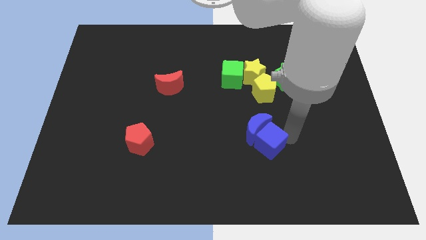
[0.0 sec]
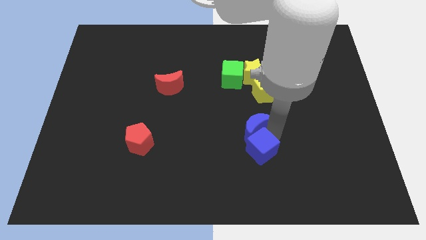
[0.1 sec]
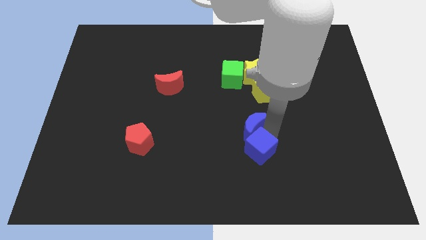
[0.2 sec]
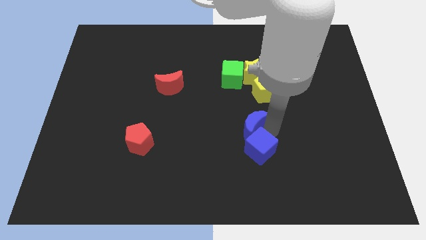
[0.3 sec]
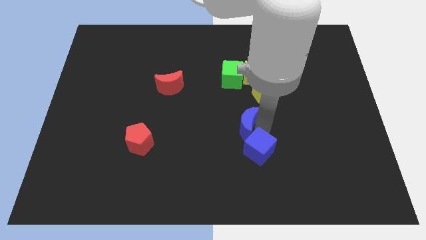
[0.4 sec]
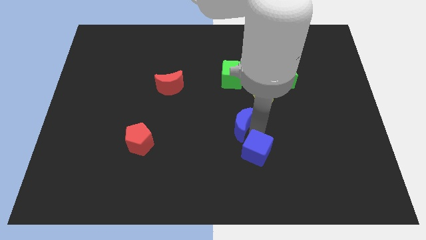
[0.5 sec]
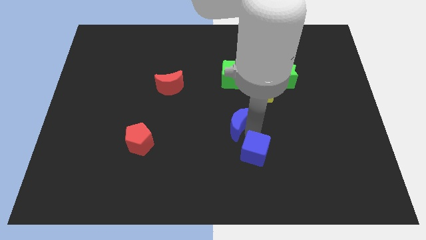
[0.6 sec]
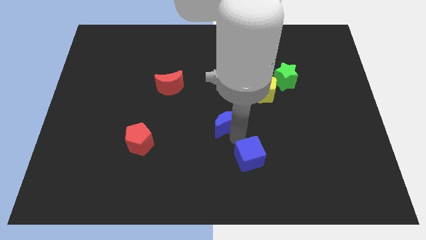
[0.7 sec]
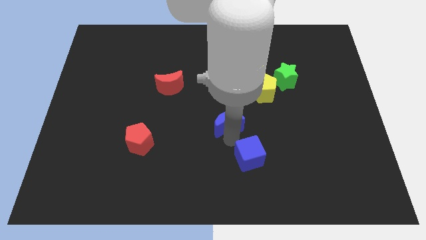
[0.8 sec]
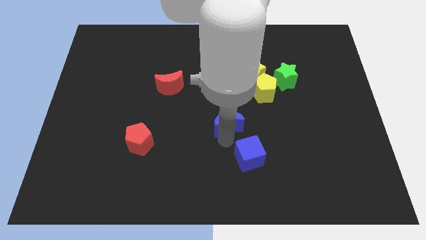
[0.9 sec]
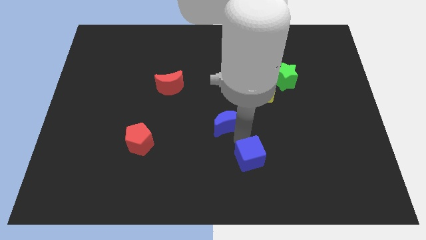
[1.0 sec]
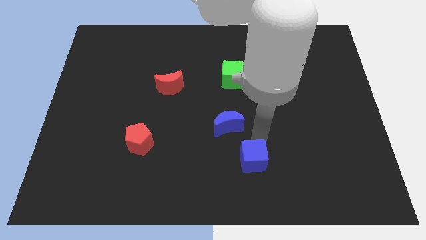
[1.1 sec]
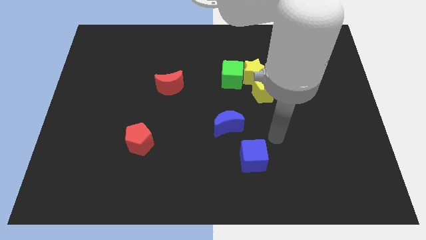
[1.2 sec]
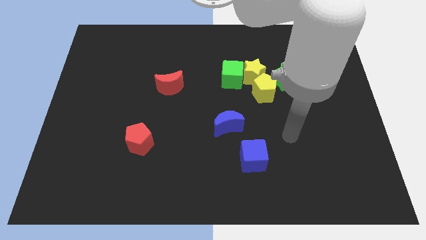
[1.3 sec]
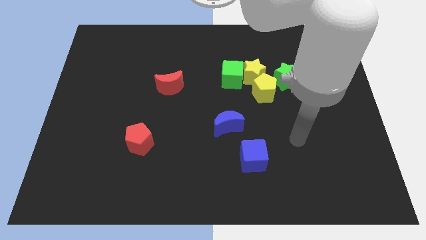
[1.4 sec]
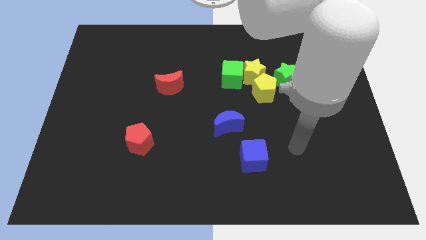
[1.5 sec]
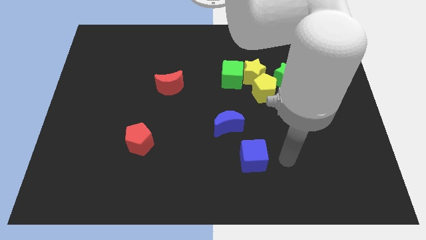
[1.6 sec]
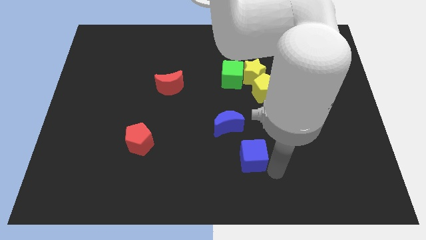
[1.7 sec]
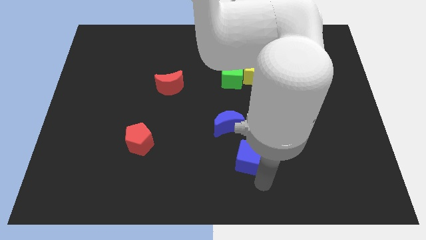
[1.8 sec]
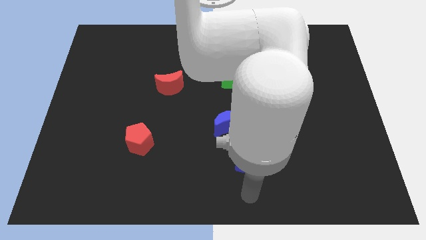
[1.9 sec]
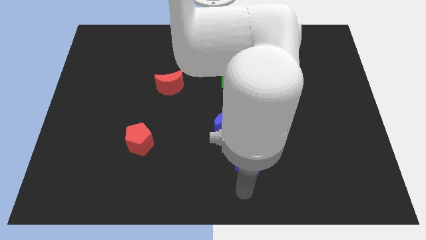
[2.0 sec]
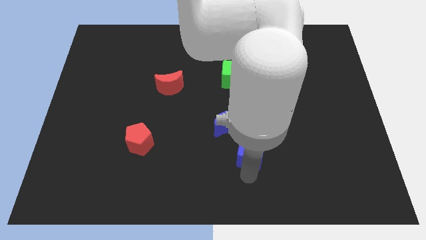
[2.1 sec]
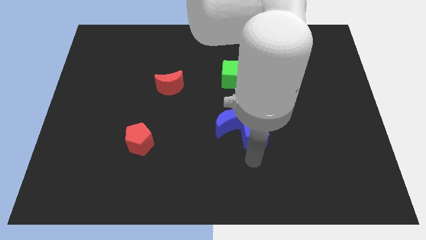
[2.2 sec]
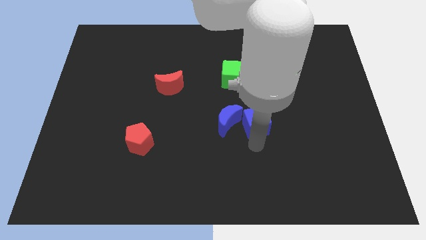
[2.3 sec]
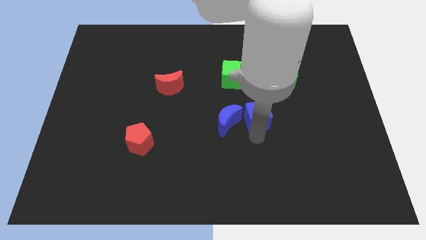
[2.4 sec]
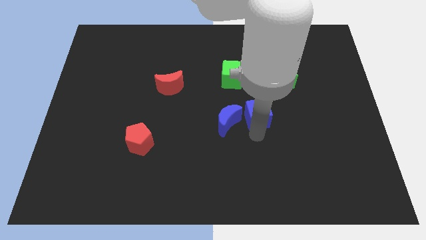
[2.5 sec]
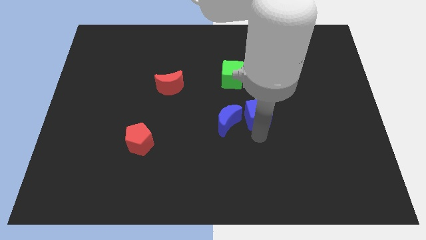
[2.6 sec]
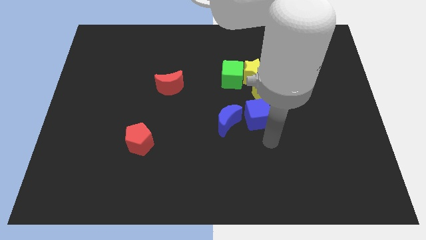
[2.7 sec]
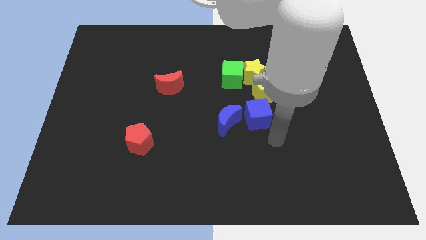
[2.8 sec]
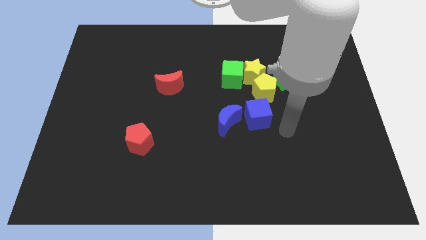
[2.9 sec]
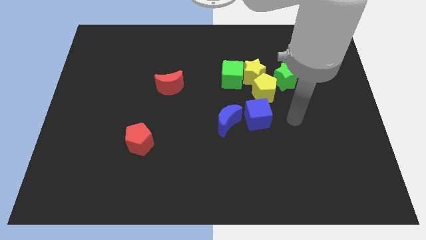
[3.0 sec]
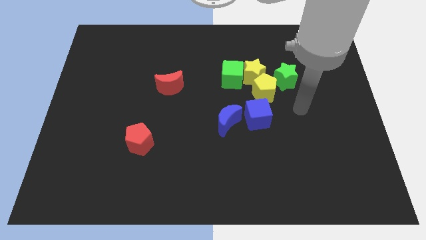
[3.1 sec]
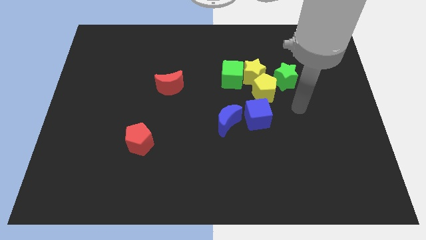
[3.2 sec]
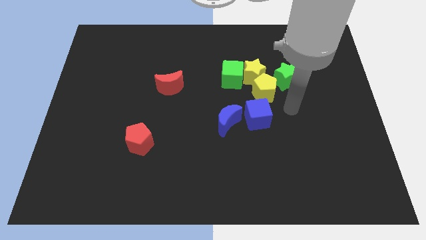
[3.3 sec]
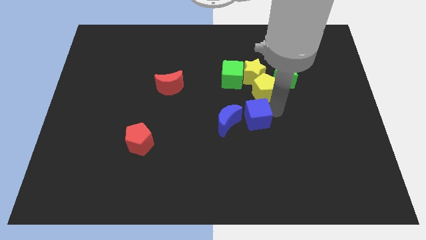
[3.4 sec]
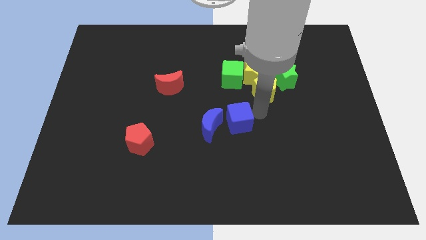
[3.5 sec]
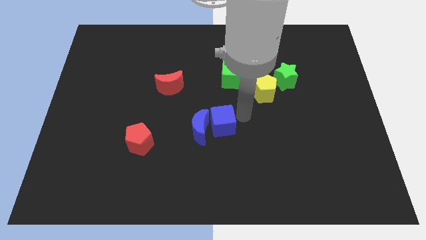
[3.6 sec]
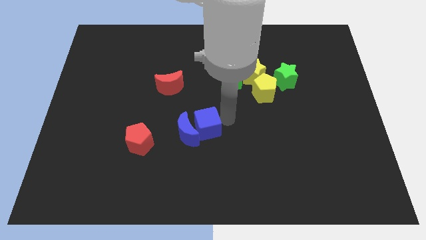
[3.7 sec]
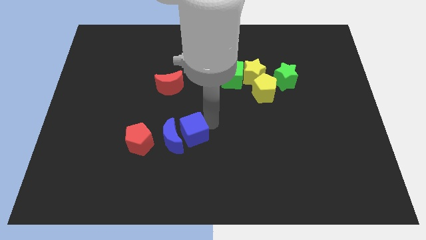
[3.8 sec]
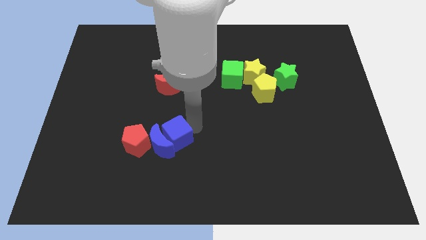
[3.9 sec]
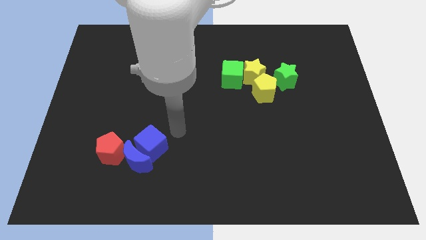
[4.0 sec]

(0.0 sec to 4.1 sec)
push the blue cube and blue crescent into the red pentagon

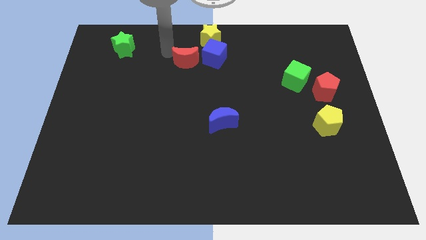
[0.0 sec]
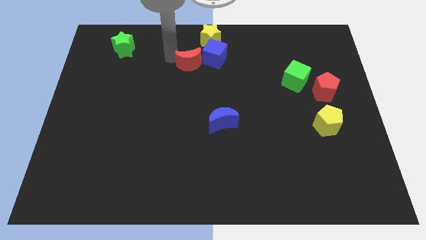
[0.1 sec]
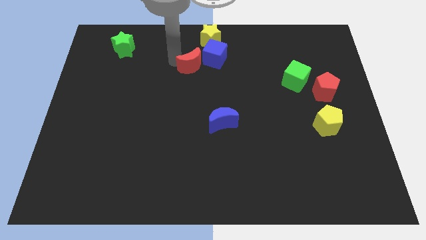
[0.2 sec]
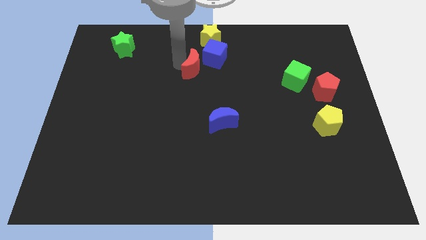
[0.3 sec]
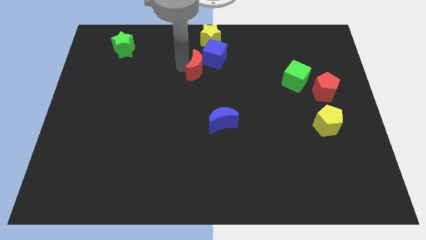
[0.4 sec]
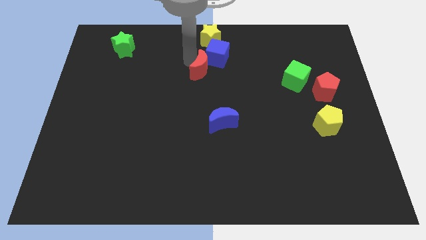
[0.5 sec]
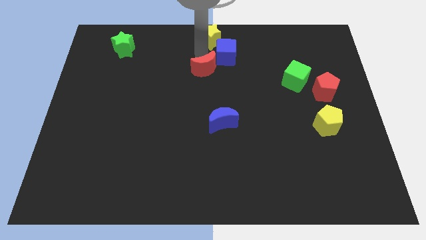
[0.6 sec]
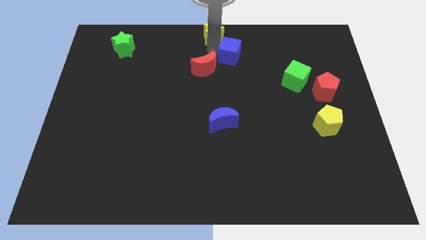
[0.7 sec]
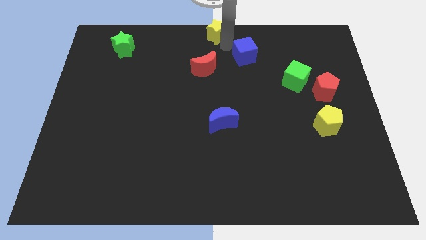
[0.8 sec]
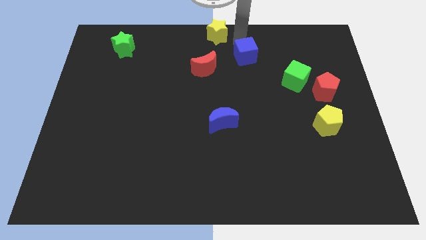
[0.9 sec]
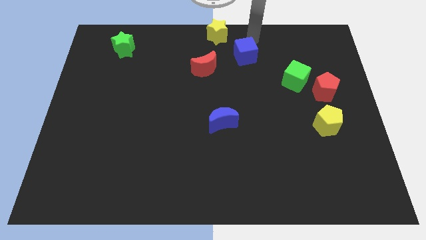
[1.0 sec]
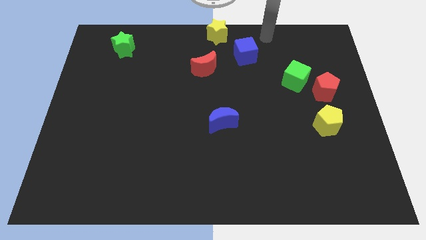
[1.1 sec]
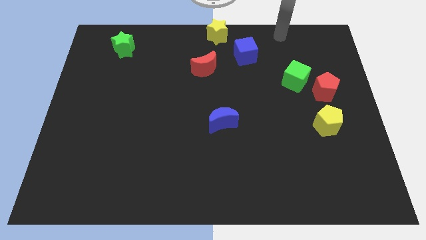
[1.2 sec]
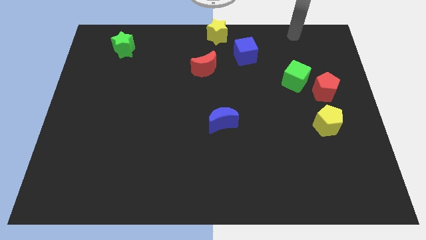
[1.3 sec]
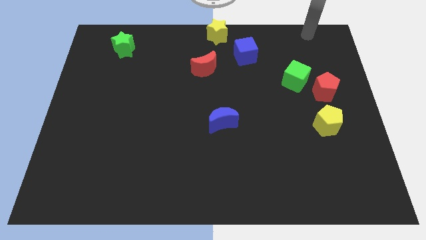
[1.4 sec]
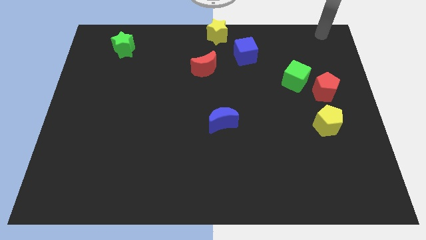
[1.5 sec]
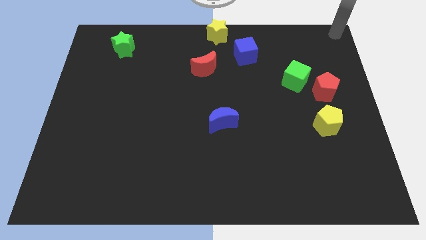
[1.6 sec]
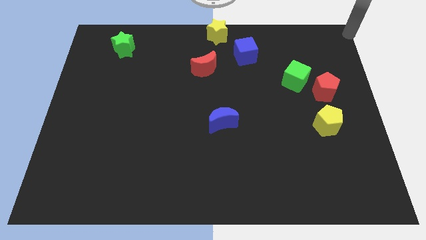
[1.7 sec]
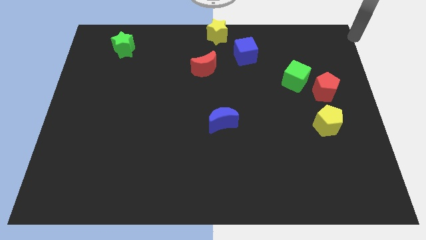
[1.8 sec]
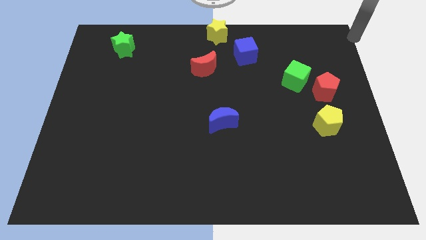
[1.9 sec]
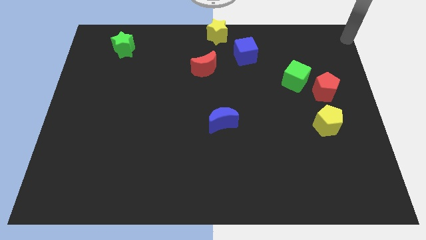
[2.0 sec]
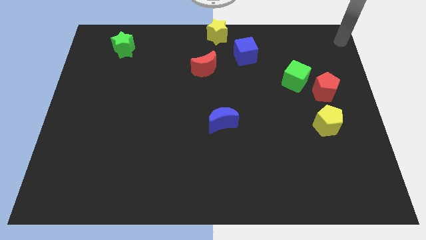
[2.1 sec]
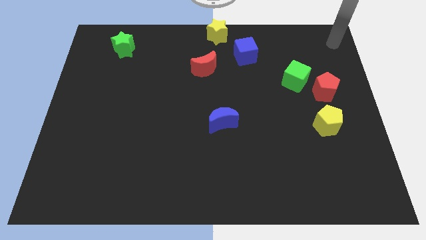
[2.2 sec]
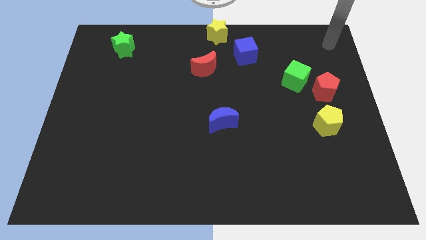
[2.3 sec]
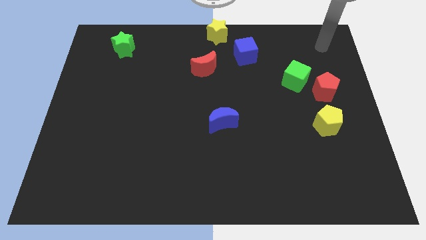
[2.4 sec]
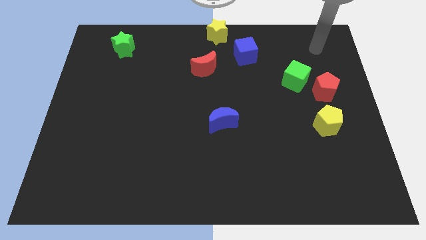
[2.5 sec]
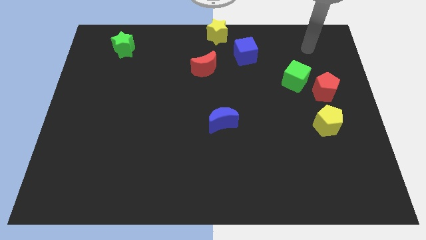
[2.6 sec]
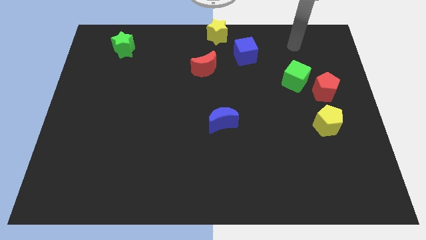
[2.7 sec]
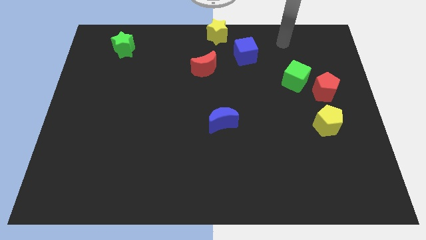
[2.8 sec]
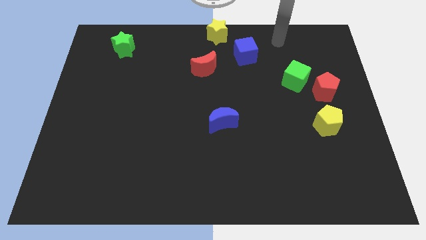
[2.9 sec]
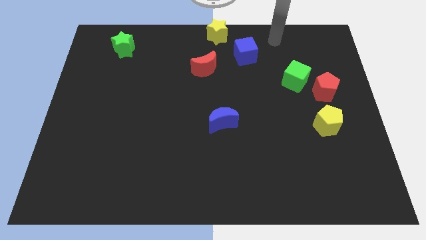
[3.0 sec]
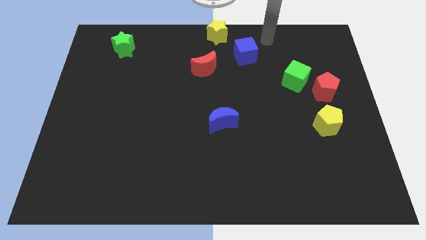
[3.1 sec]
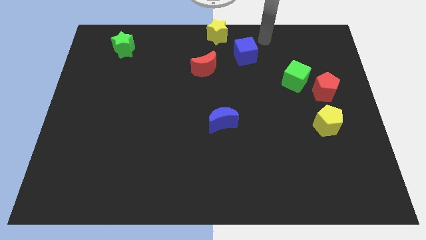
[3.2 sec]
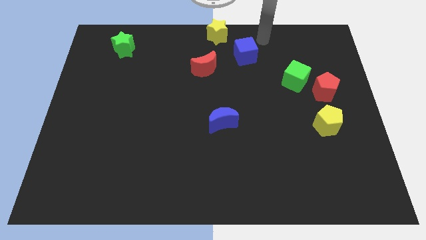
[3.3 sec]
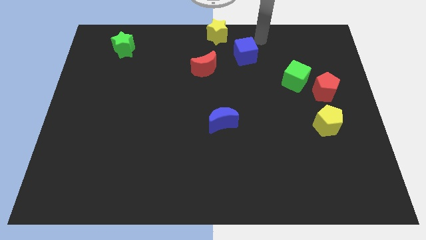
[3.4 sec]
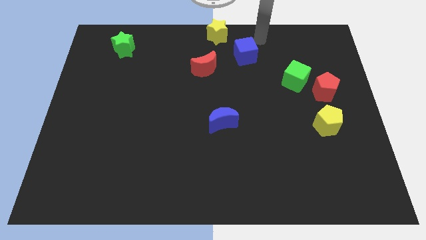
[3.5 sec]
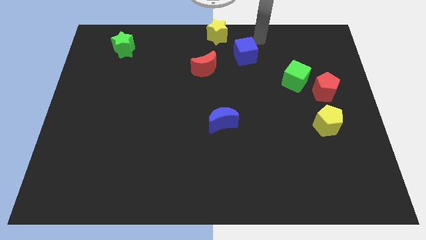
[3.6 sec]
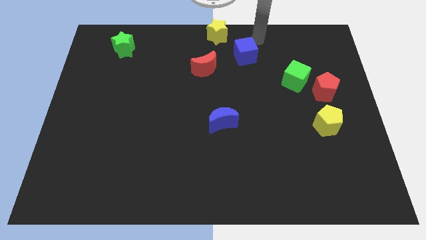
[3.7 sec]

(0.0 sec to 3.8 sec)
place the blue cube to the bottom right of the yellow star

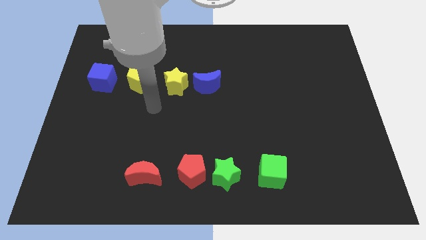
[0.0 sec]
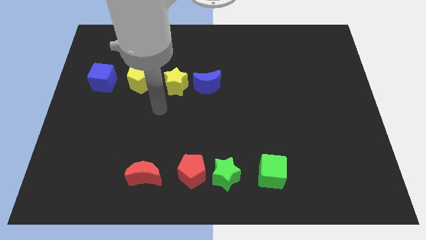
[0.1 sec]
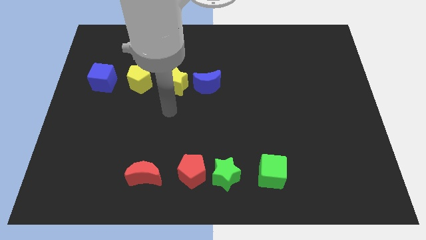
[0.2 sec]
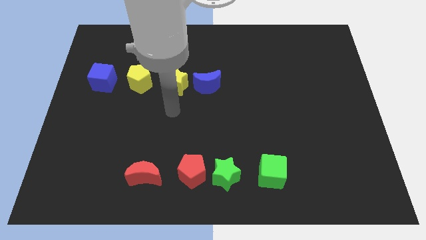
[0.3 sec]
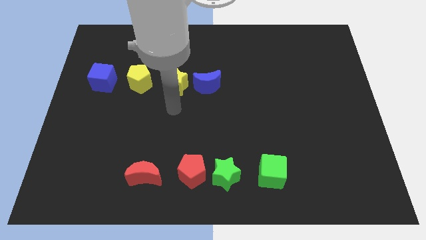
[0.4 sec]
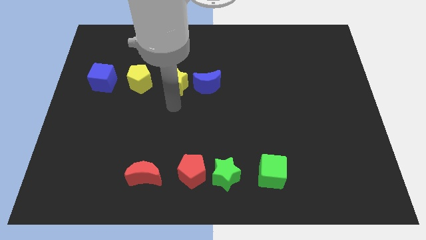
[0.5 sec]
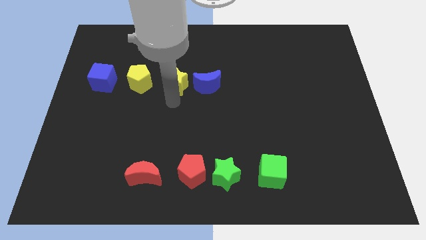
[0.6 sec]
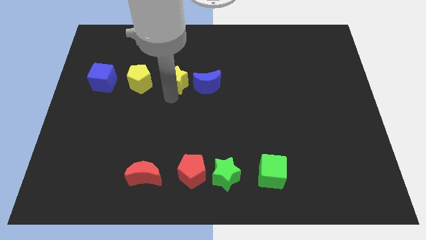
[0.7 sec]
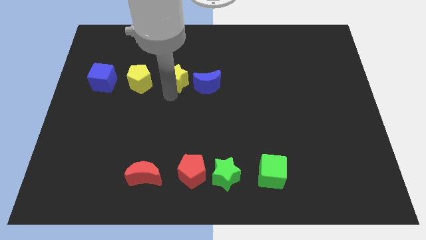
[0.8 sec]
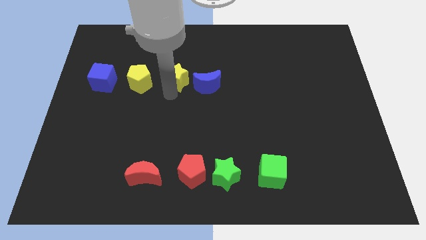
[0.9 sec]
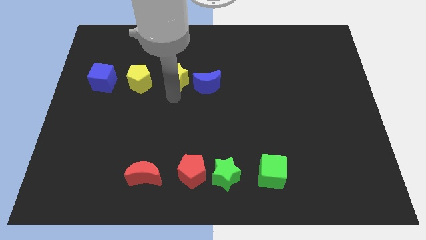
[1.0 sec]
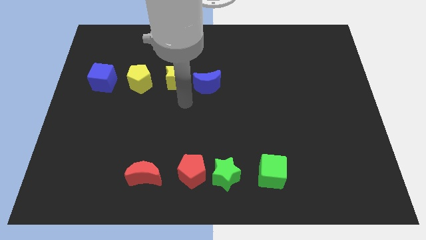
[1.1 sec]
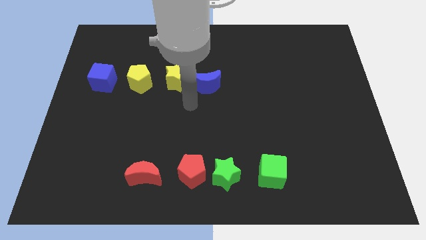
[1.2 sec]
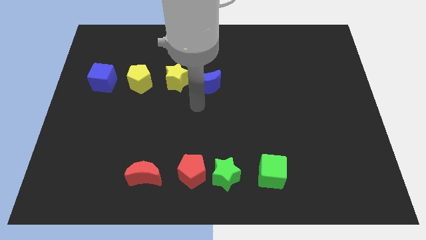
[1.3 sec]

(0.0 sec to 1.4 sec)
slightly push the yellow star to the top
